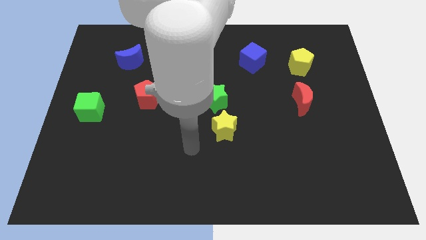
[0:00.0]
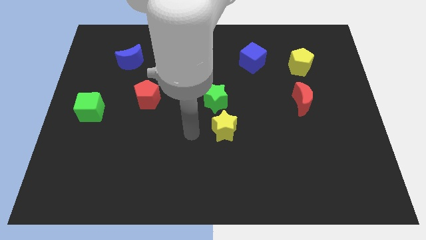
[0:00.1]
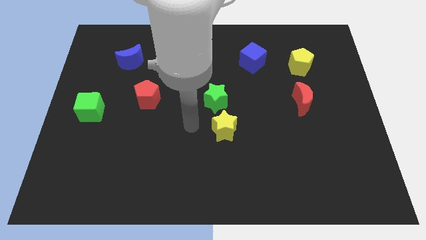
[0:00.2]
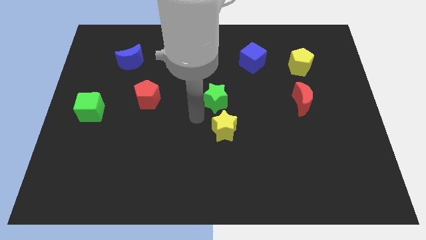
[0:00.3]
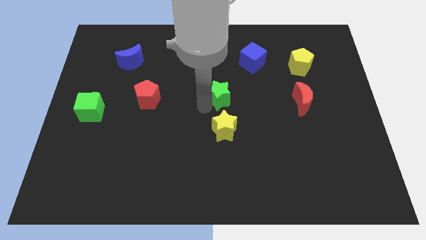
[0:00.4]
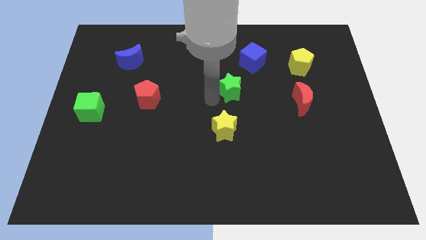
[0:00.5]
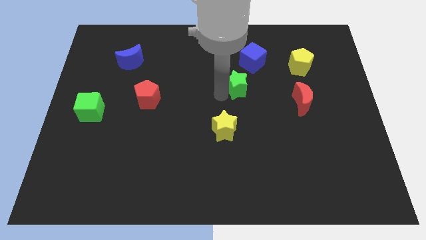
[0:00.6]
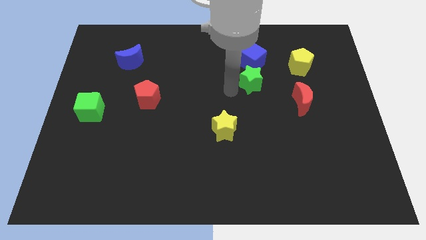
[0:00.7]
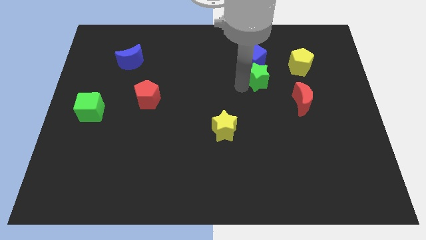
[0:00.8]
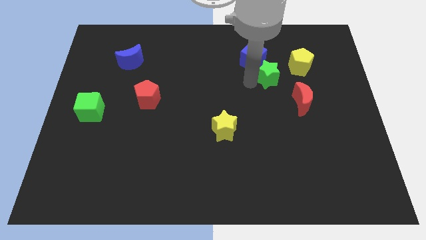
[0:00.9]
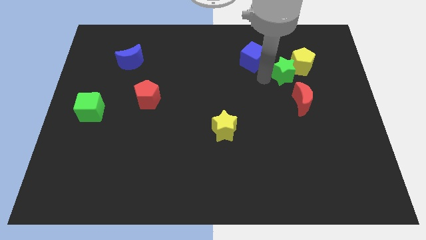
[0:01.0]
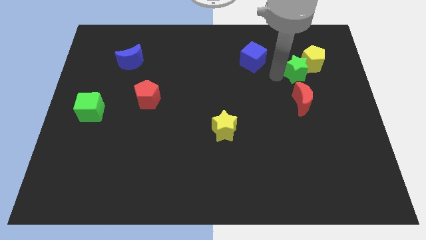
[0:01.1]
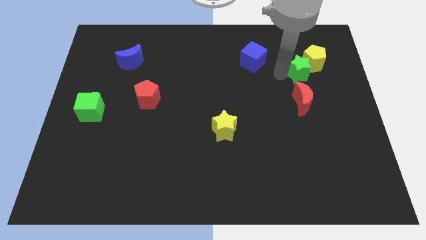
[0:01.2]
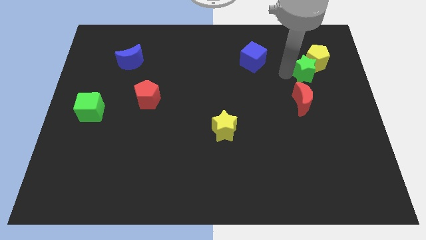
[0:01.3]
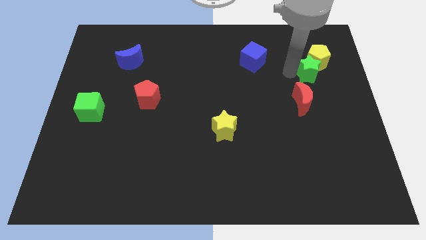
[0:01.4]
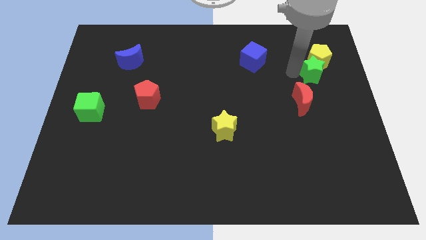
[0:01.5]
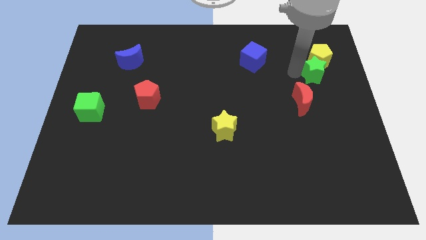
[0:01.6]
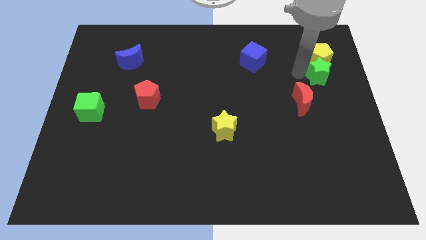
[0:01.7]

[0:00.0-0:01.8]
move the green star into the yellow pentagon

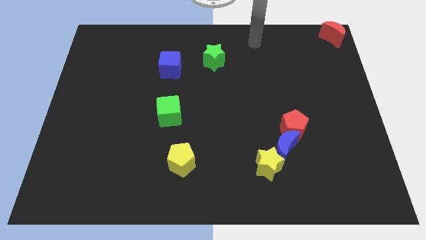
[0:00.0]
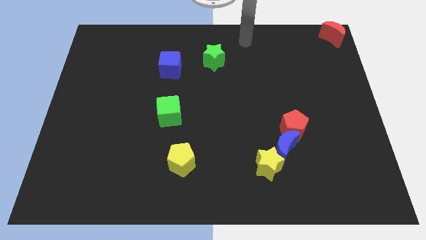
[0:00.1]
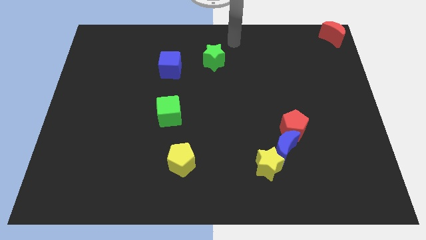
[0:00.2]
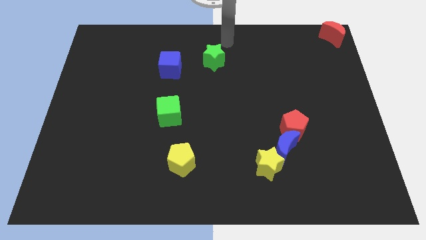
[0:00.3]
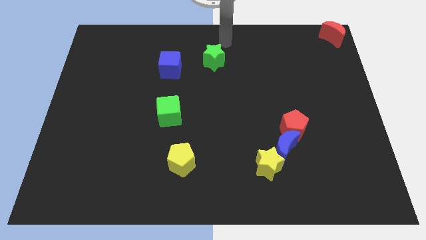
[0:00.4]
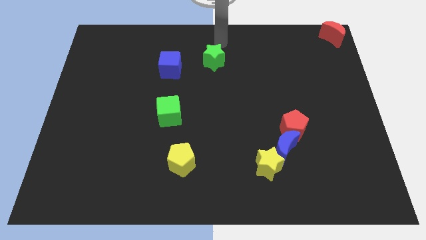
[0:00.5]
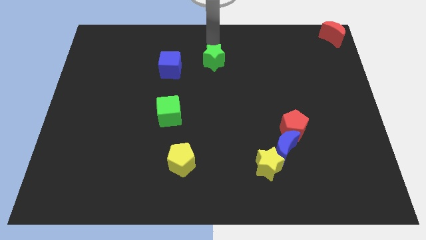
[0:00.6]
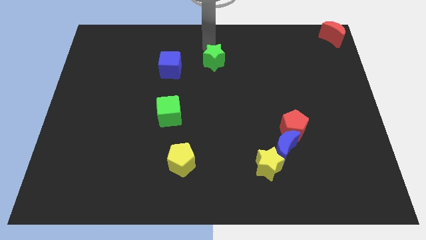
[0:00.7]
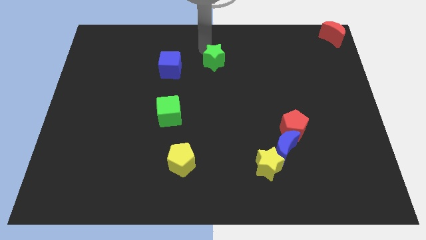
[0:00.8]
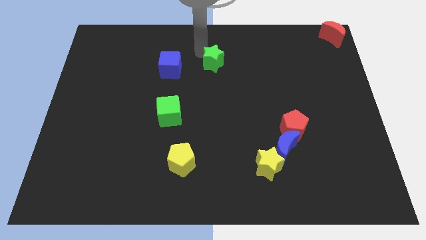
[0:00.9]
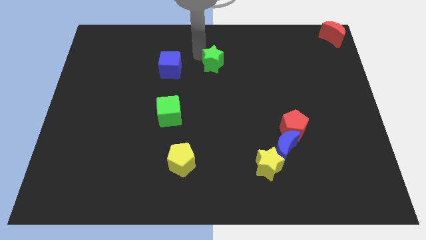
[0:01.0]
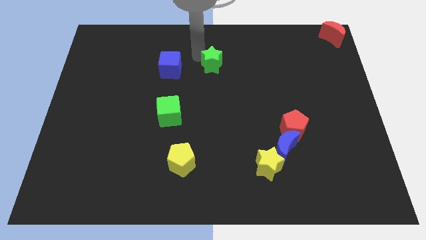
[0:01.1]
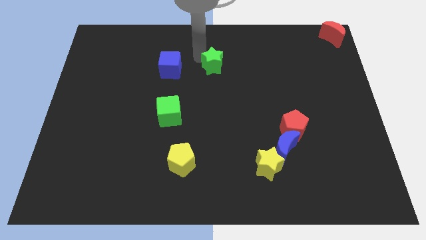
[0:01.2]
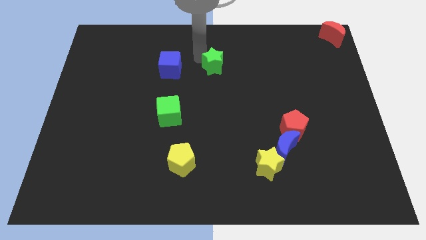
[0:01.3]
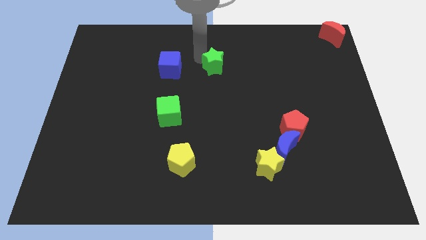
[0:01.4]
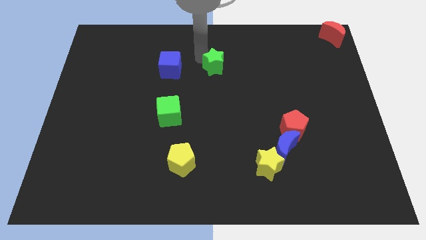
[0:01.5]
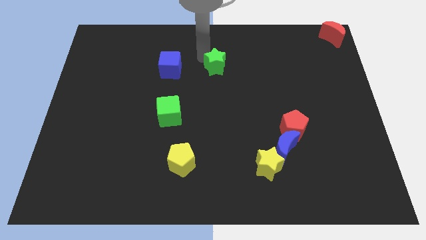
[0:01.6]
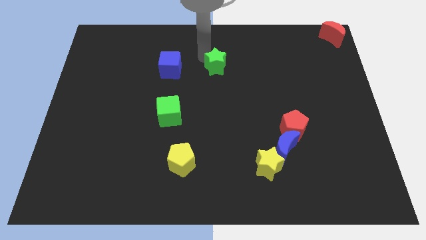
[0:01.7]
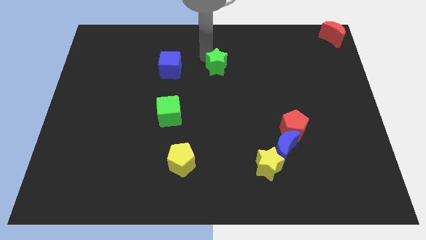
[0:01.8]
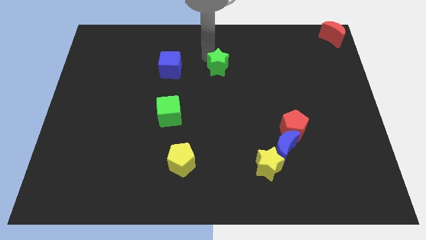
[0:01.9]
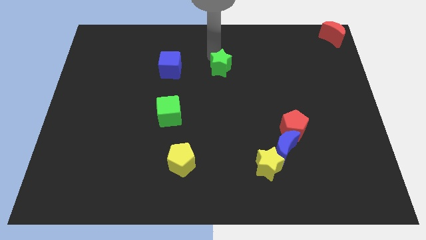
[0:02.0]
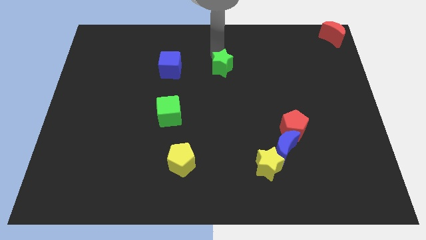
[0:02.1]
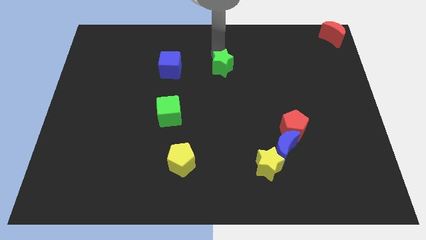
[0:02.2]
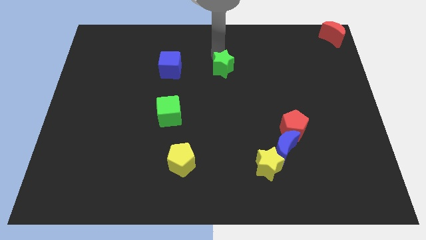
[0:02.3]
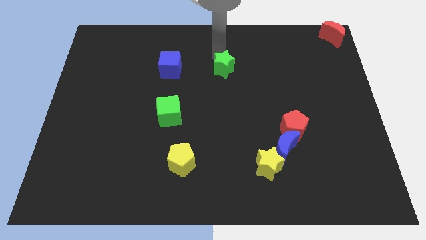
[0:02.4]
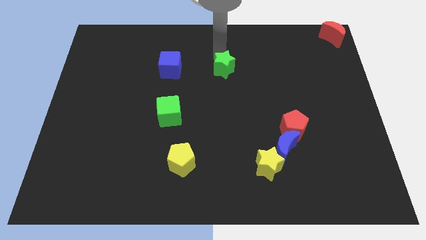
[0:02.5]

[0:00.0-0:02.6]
move the green star to the right of the blue cube

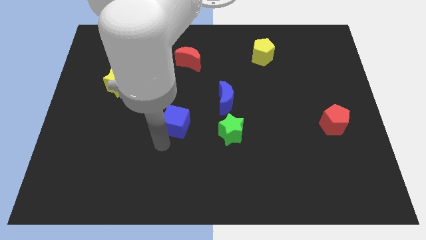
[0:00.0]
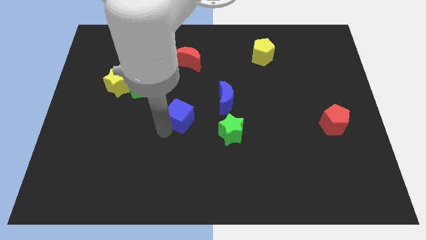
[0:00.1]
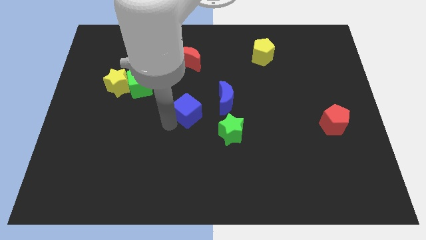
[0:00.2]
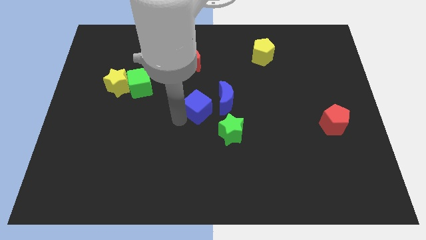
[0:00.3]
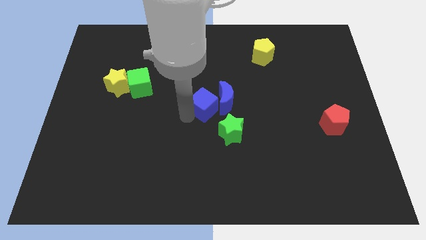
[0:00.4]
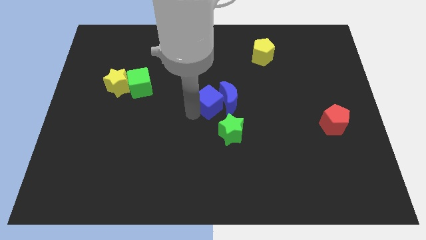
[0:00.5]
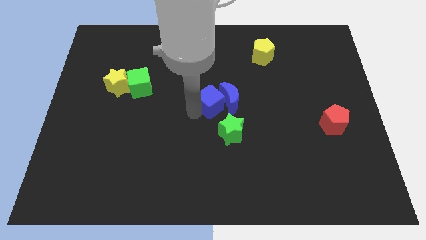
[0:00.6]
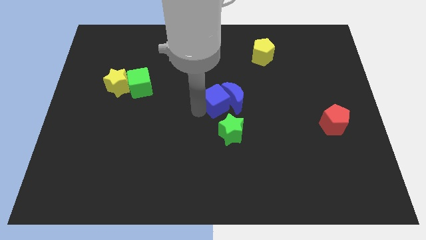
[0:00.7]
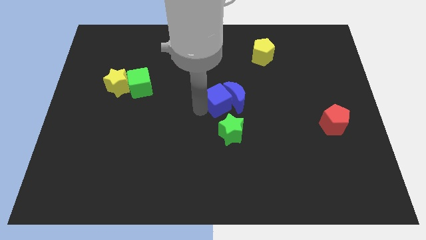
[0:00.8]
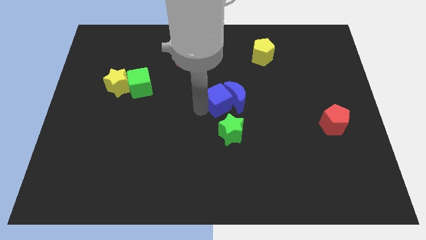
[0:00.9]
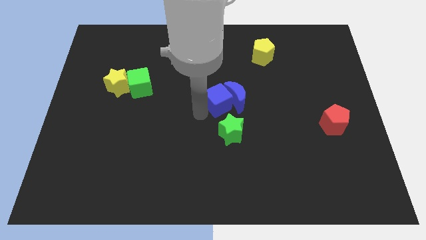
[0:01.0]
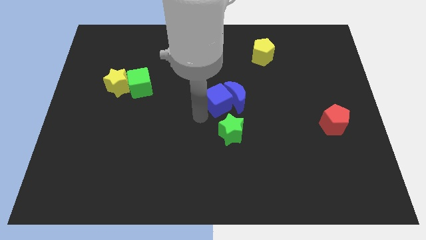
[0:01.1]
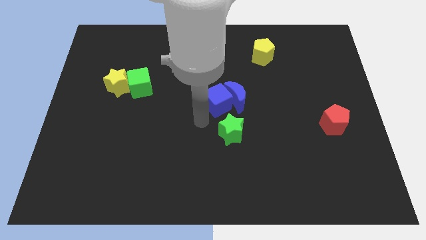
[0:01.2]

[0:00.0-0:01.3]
move blue cube into the blue moon

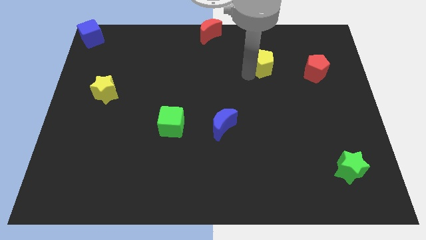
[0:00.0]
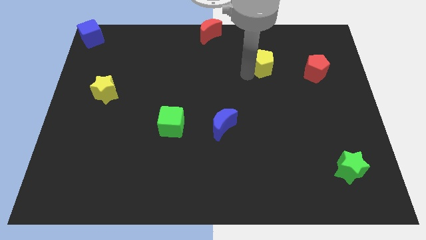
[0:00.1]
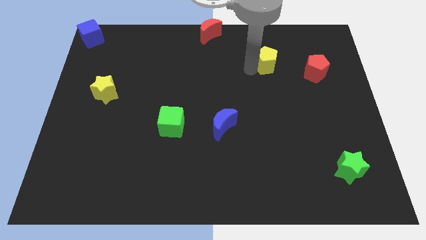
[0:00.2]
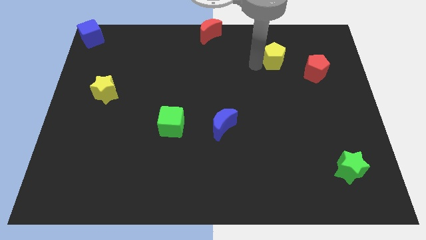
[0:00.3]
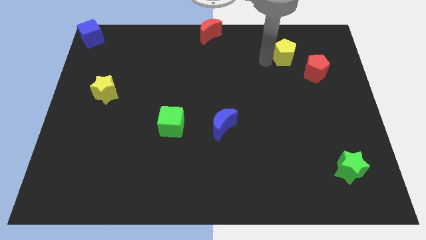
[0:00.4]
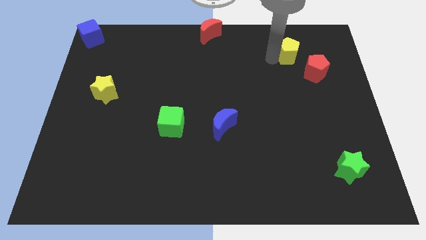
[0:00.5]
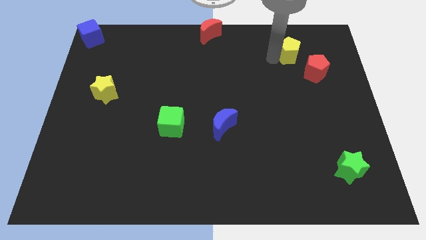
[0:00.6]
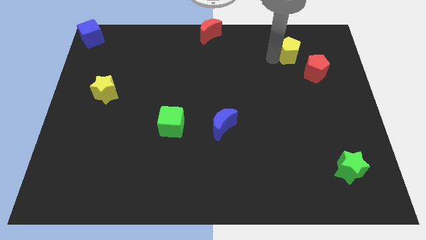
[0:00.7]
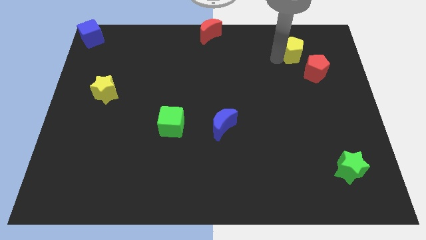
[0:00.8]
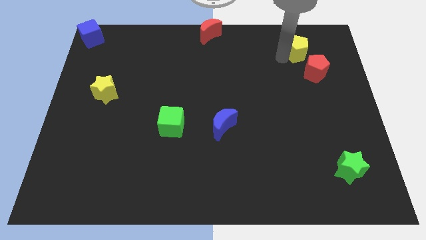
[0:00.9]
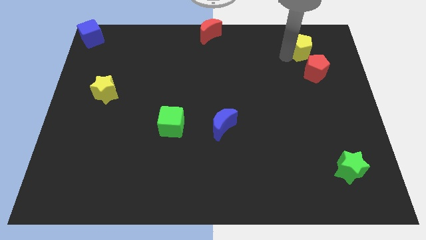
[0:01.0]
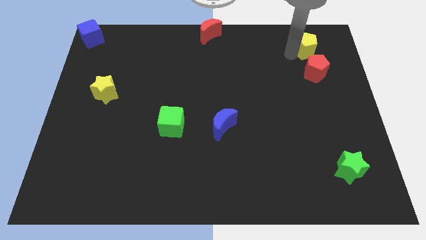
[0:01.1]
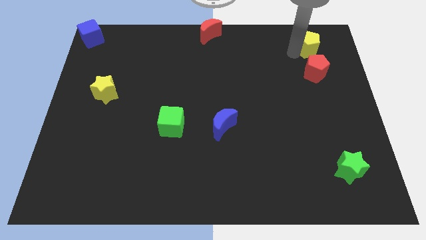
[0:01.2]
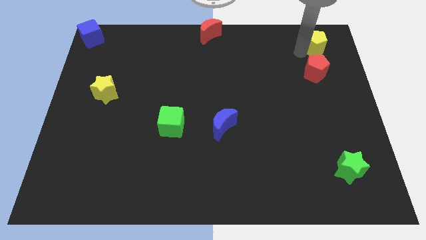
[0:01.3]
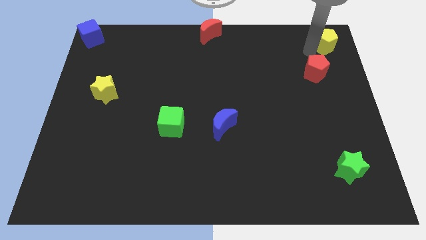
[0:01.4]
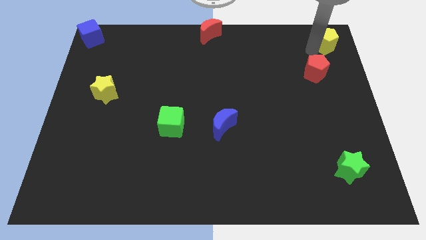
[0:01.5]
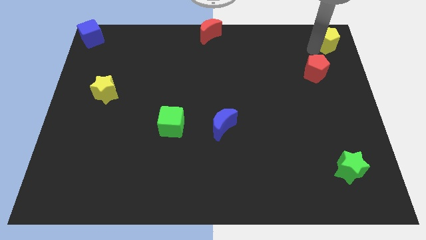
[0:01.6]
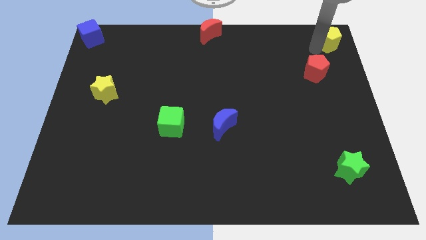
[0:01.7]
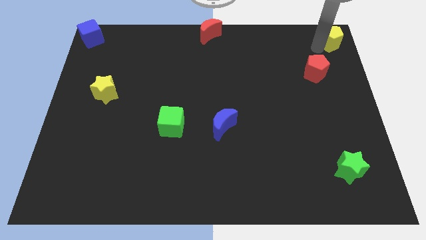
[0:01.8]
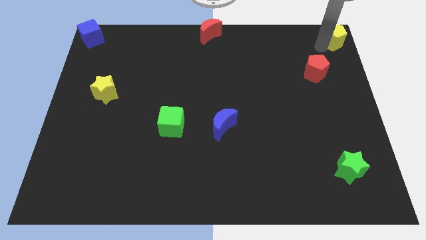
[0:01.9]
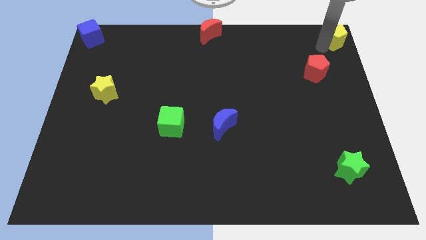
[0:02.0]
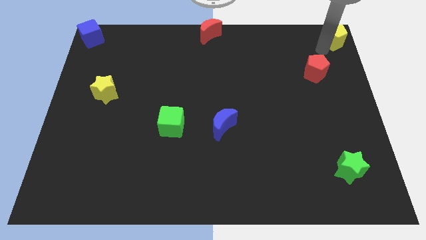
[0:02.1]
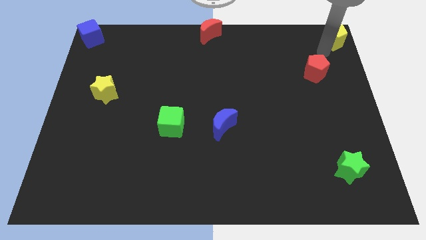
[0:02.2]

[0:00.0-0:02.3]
push the yellow pentagon to the top right corner

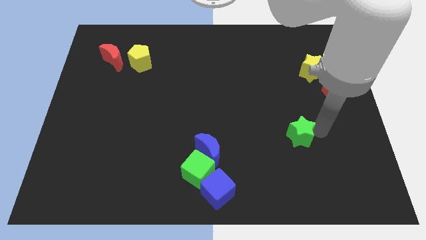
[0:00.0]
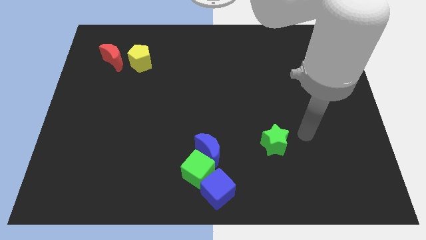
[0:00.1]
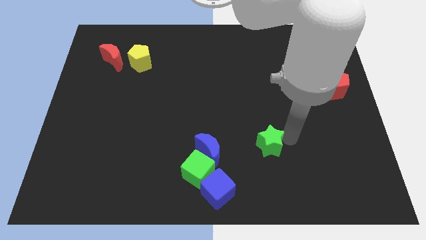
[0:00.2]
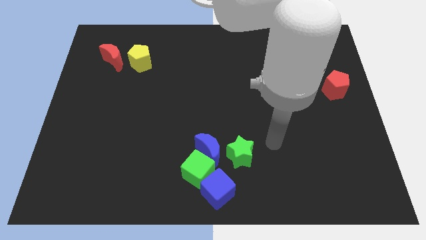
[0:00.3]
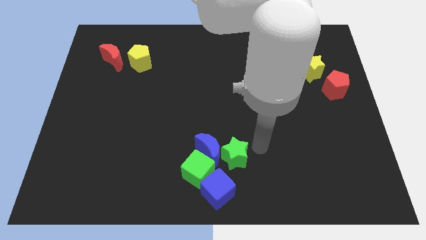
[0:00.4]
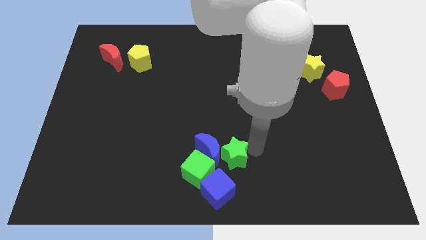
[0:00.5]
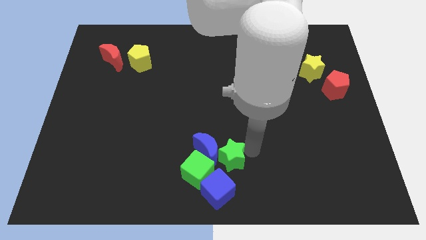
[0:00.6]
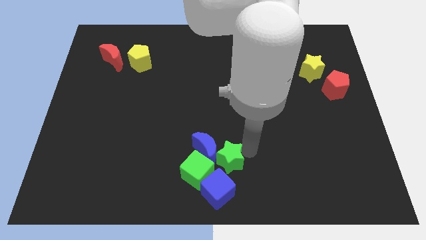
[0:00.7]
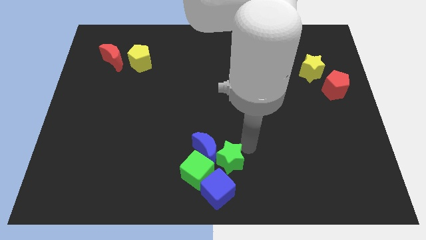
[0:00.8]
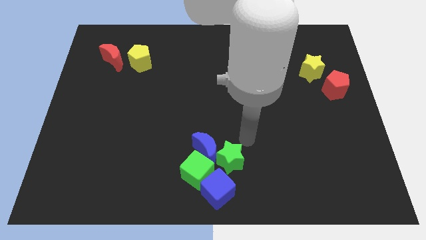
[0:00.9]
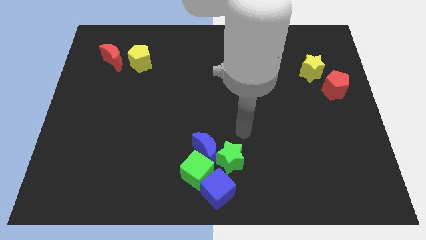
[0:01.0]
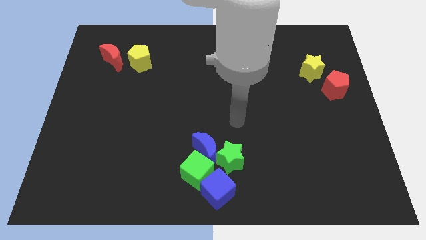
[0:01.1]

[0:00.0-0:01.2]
move the green star close the blue crescent
